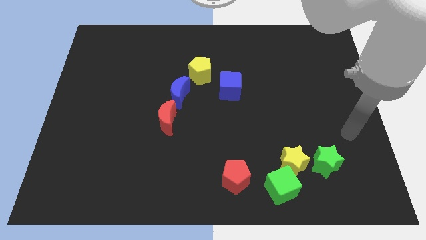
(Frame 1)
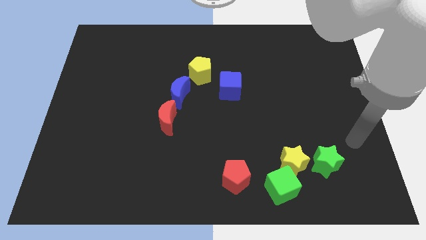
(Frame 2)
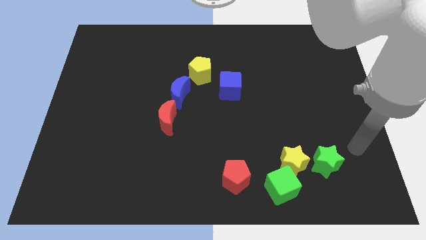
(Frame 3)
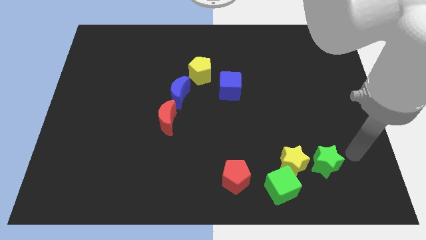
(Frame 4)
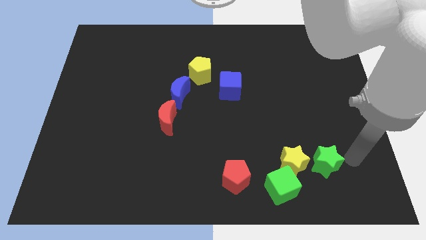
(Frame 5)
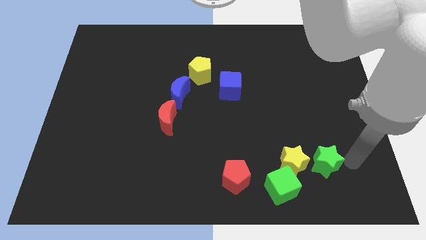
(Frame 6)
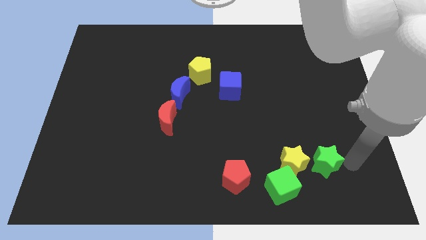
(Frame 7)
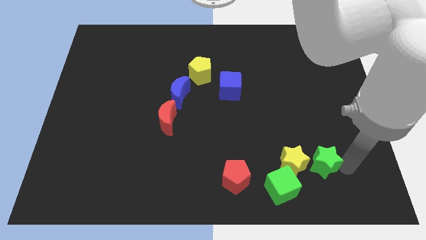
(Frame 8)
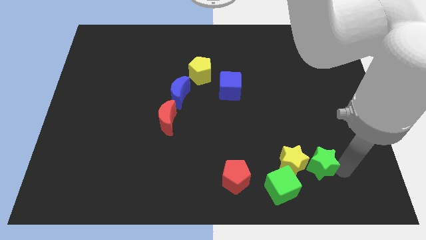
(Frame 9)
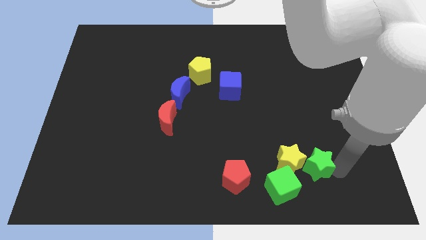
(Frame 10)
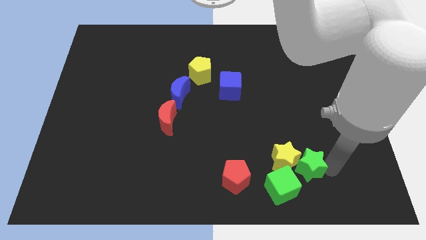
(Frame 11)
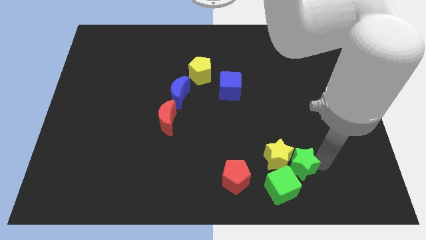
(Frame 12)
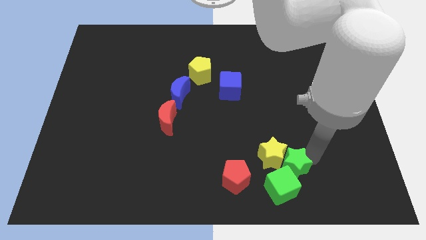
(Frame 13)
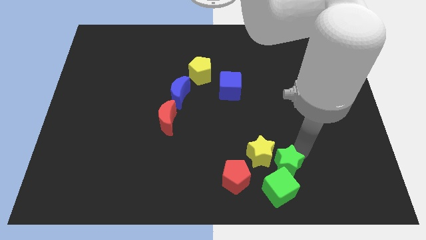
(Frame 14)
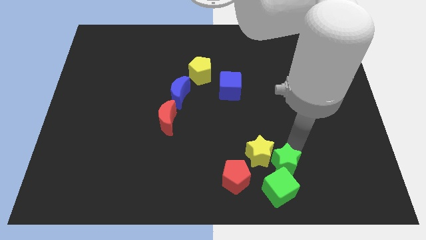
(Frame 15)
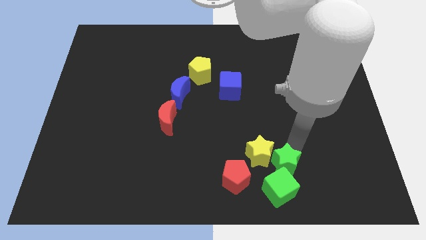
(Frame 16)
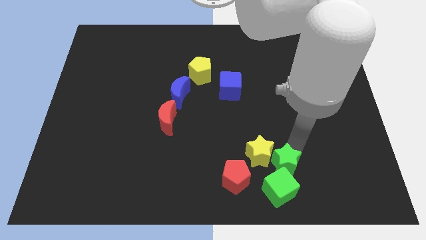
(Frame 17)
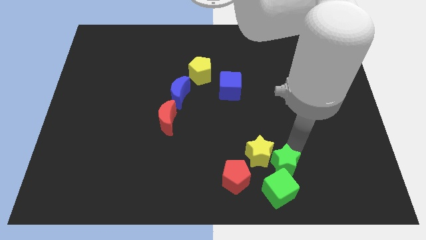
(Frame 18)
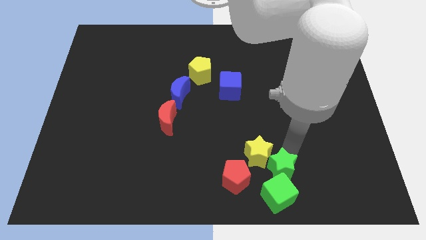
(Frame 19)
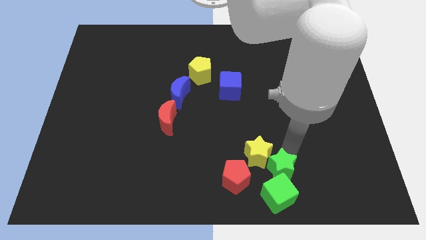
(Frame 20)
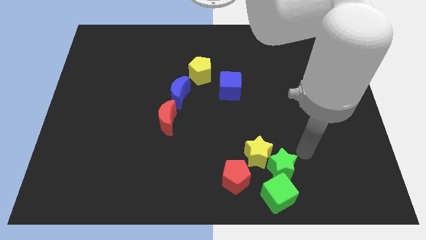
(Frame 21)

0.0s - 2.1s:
push green and yellow star to left

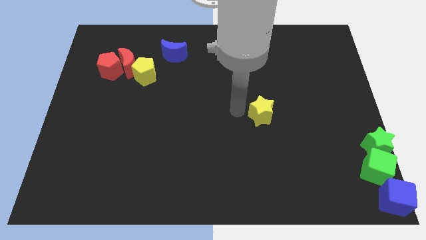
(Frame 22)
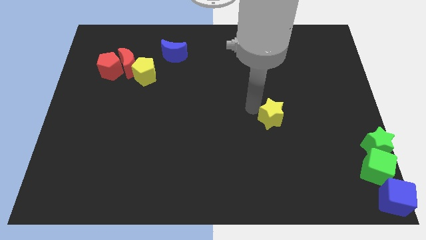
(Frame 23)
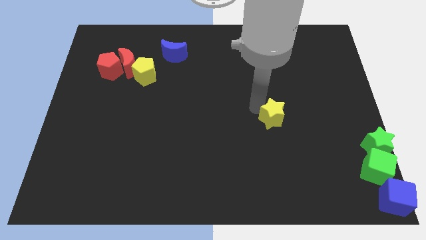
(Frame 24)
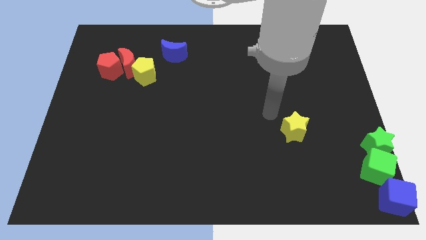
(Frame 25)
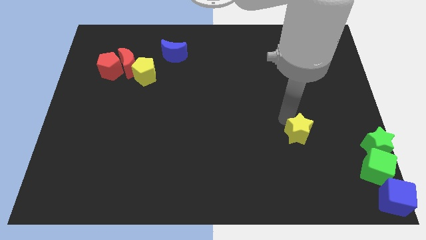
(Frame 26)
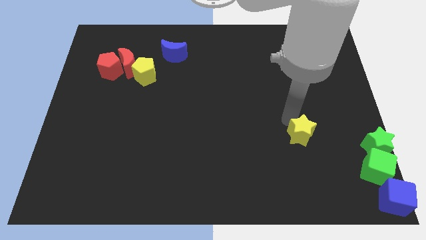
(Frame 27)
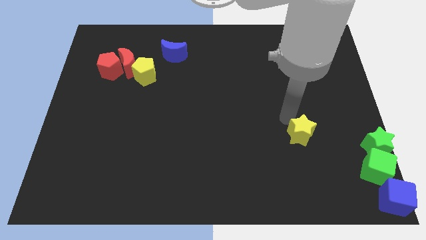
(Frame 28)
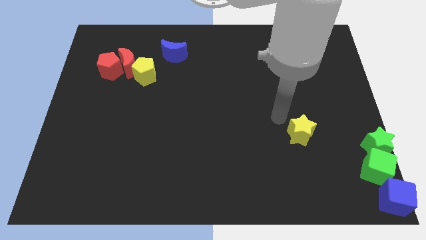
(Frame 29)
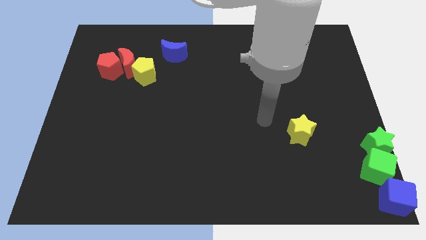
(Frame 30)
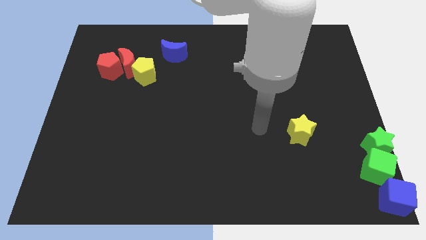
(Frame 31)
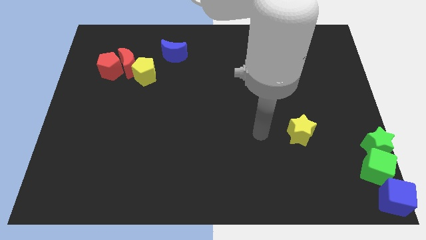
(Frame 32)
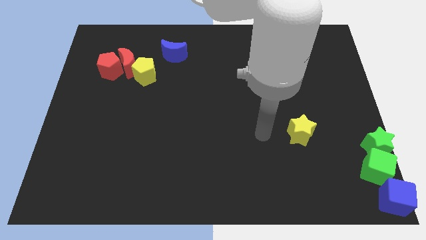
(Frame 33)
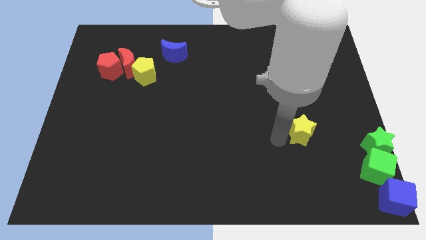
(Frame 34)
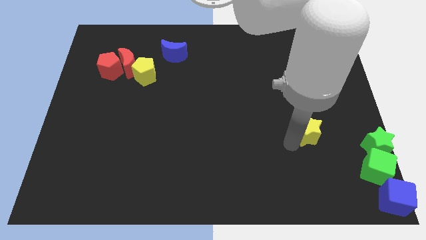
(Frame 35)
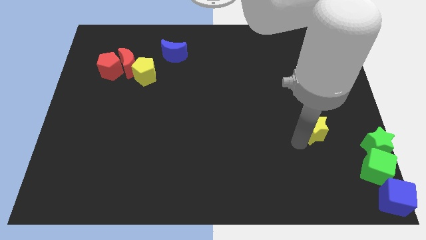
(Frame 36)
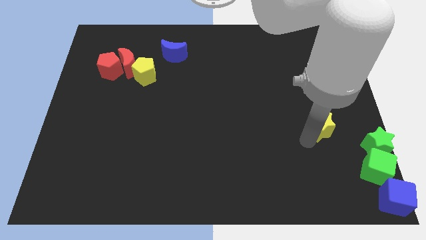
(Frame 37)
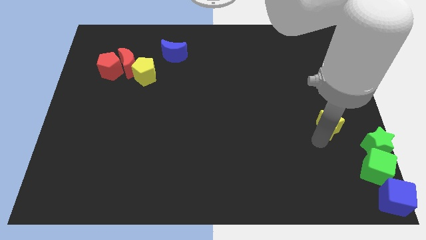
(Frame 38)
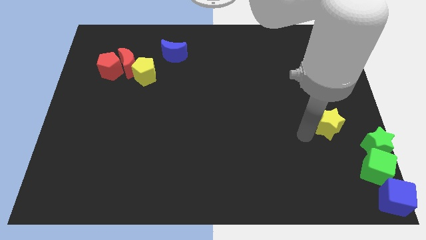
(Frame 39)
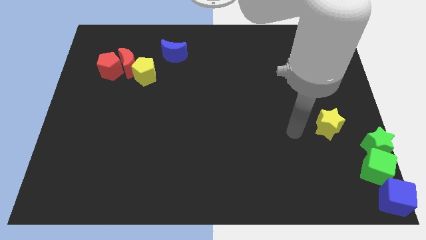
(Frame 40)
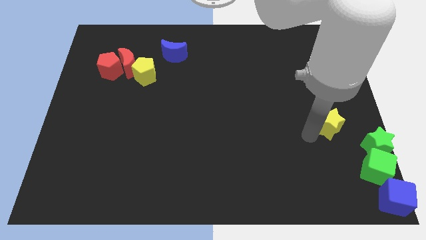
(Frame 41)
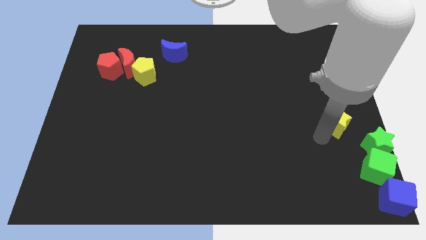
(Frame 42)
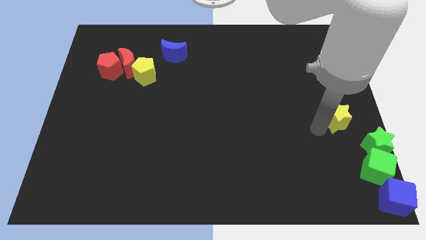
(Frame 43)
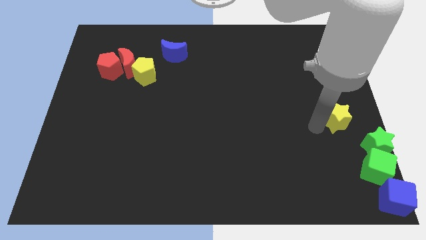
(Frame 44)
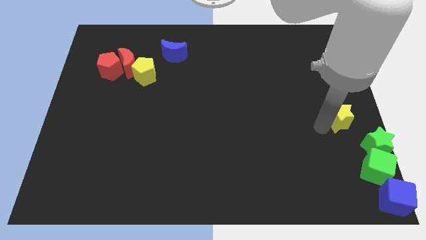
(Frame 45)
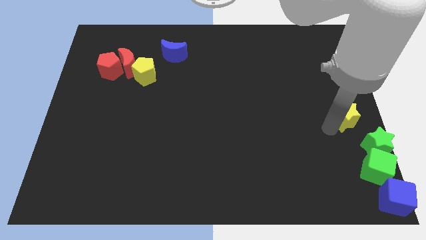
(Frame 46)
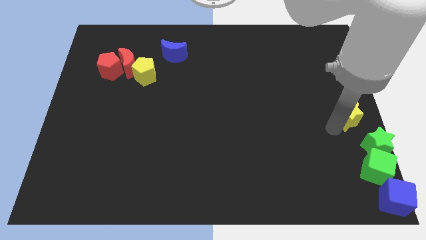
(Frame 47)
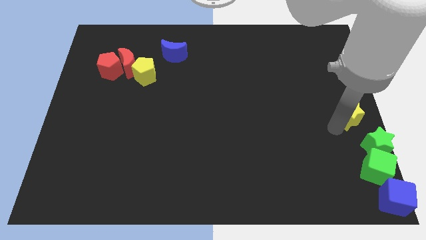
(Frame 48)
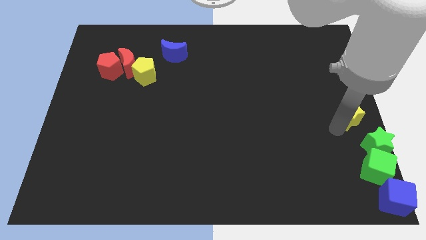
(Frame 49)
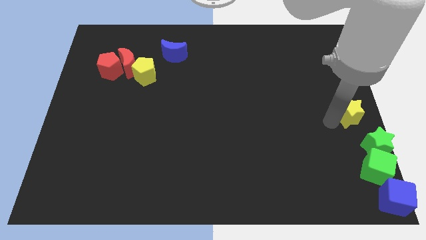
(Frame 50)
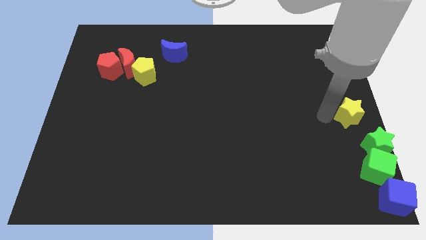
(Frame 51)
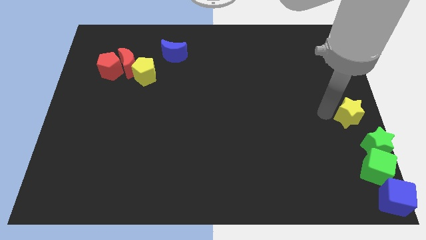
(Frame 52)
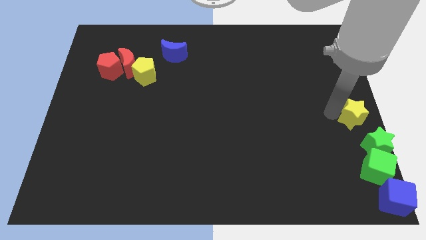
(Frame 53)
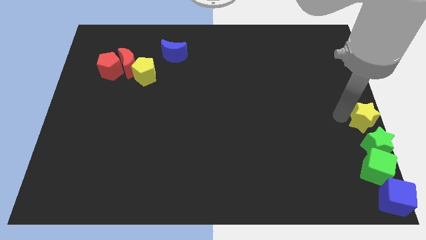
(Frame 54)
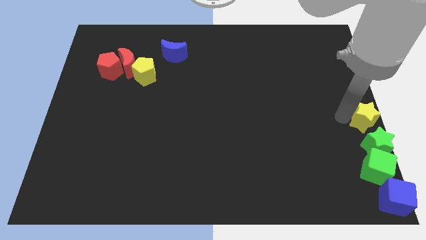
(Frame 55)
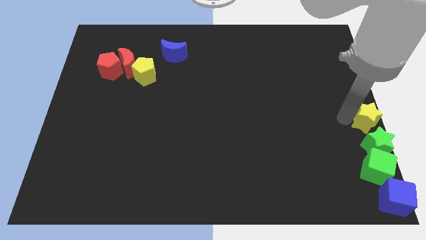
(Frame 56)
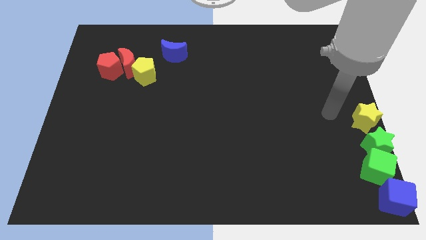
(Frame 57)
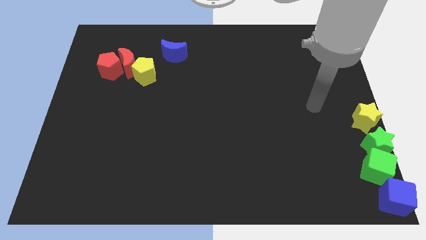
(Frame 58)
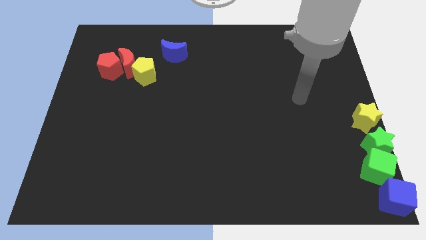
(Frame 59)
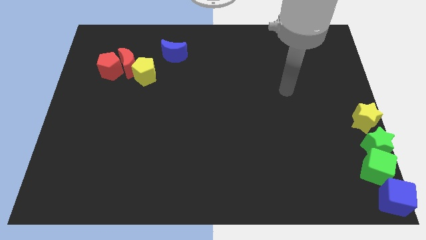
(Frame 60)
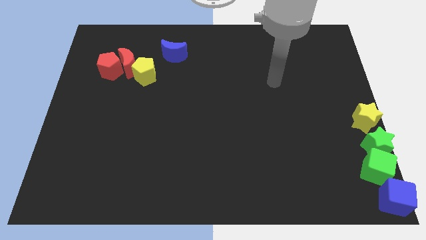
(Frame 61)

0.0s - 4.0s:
place the yellow star above the green star

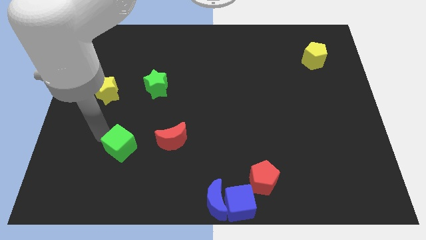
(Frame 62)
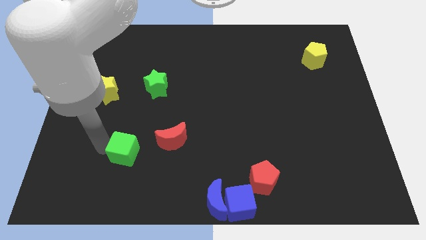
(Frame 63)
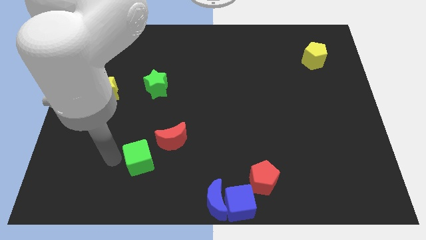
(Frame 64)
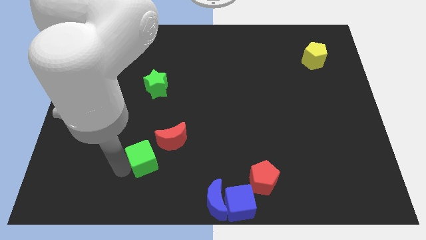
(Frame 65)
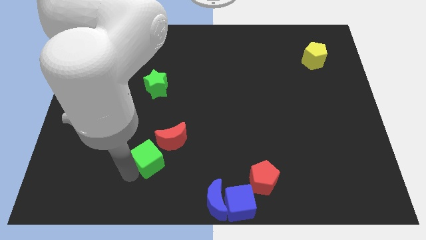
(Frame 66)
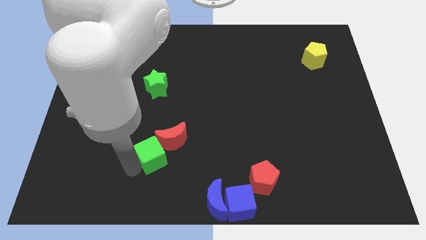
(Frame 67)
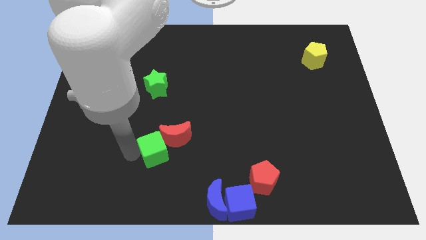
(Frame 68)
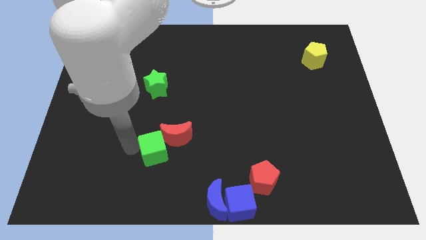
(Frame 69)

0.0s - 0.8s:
place the green cube to the left of the red crescent

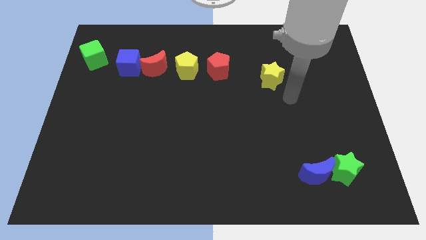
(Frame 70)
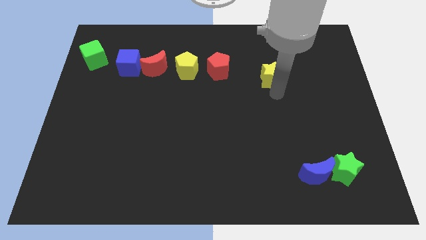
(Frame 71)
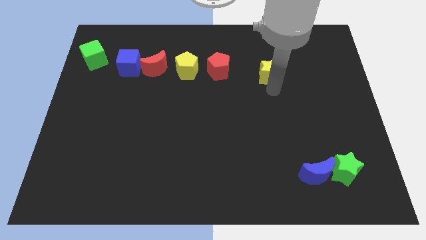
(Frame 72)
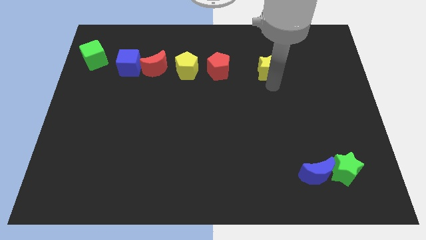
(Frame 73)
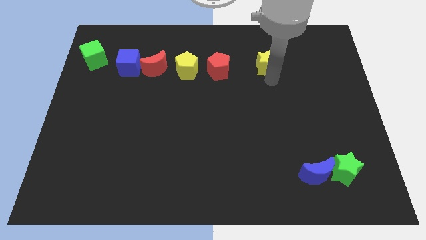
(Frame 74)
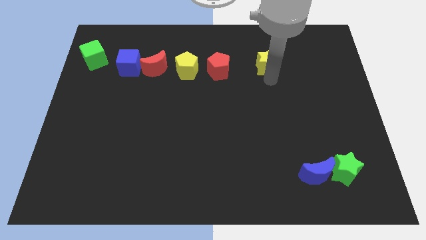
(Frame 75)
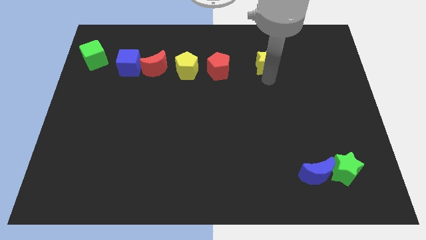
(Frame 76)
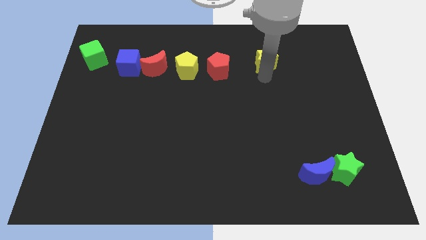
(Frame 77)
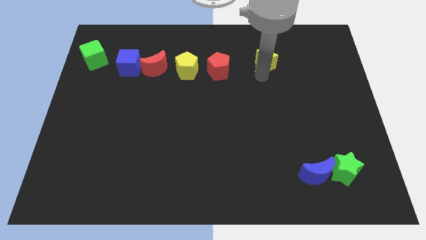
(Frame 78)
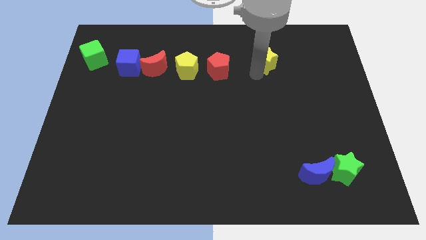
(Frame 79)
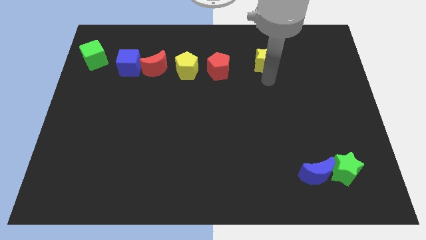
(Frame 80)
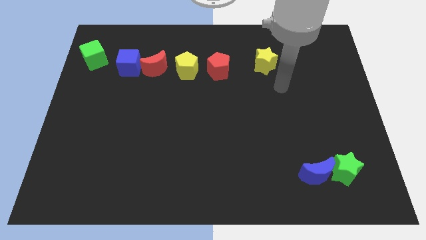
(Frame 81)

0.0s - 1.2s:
push the yellow star towards the top side of the board

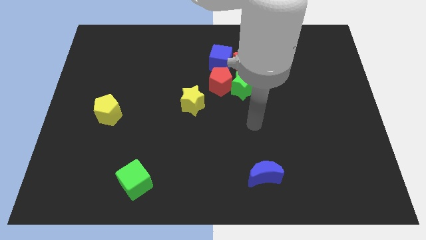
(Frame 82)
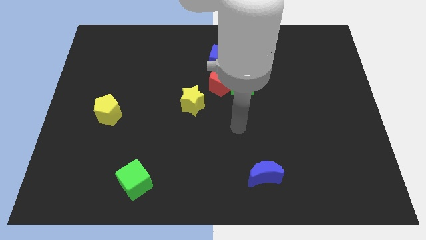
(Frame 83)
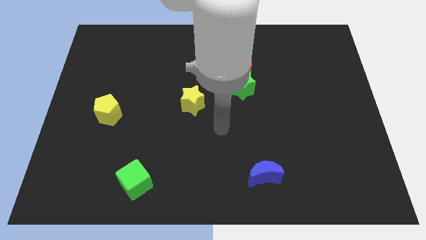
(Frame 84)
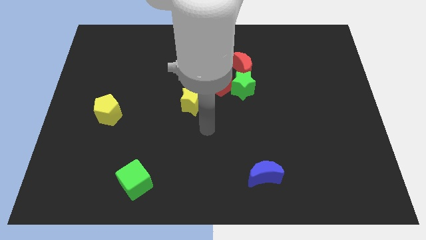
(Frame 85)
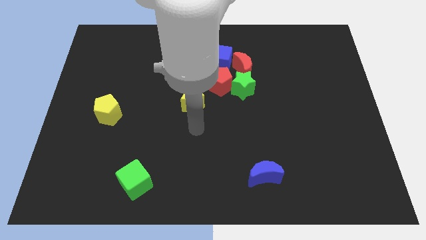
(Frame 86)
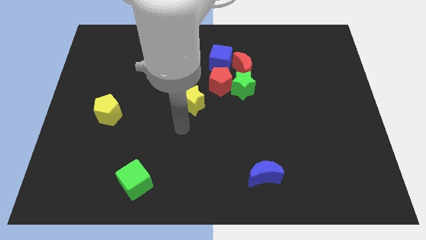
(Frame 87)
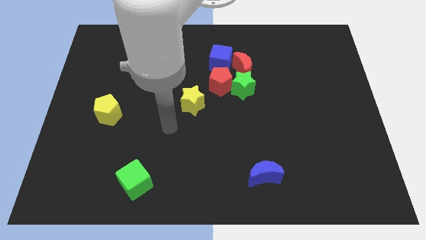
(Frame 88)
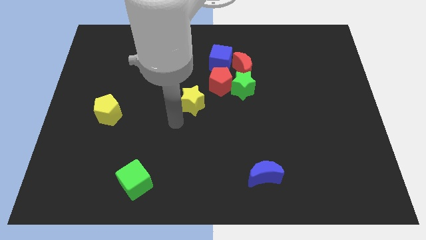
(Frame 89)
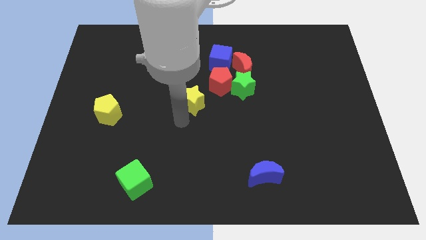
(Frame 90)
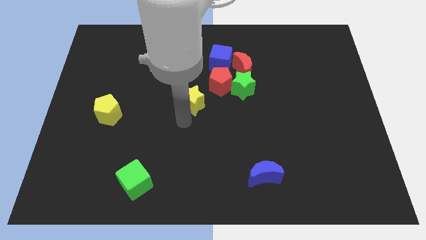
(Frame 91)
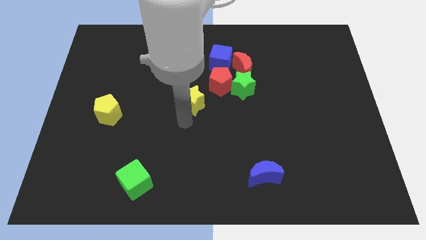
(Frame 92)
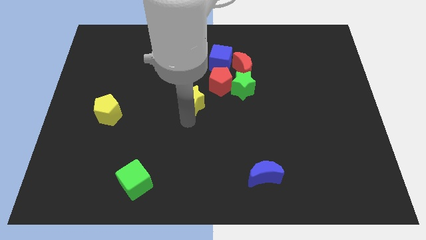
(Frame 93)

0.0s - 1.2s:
touch the bottom side of the yellow star
